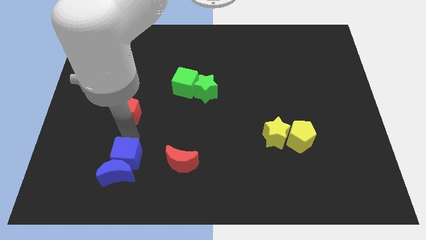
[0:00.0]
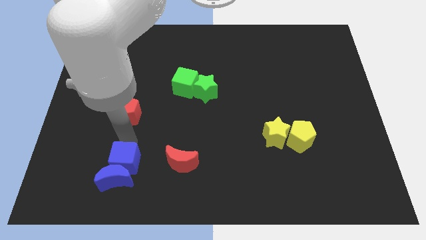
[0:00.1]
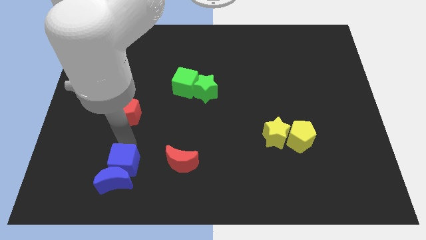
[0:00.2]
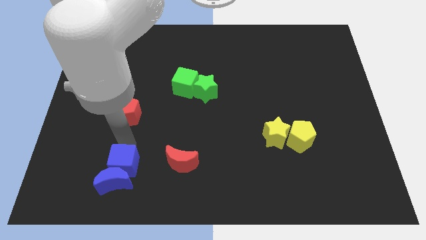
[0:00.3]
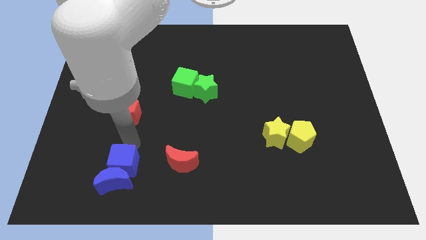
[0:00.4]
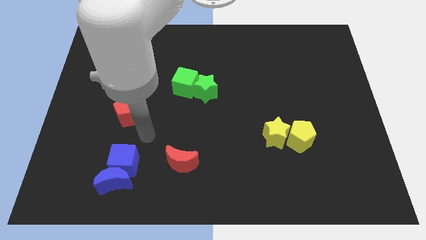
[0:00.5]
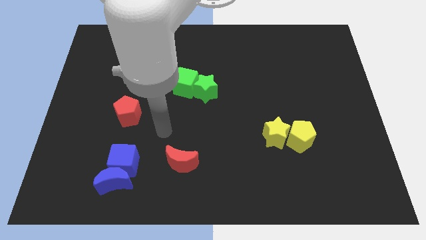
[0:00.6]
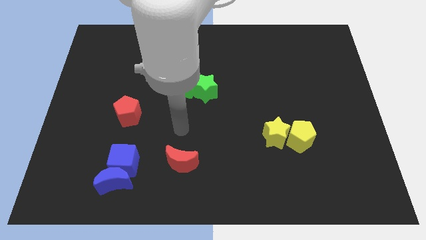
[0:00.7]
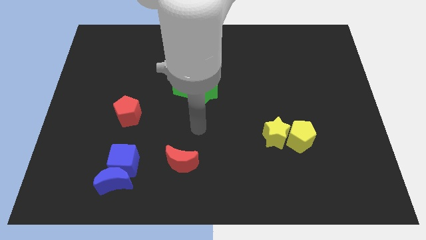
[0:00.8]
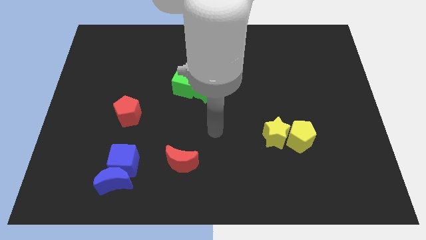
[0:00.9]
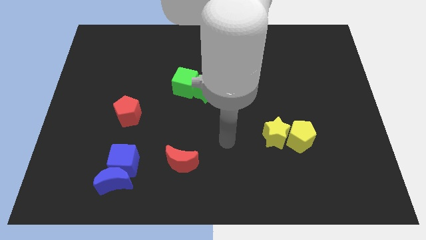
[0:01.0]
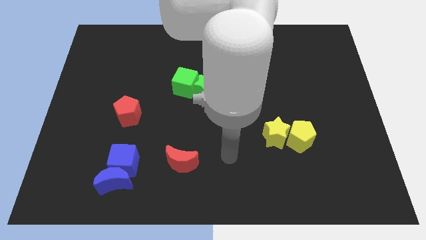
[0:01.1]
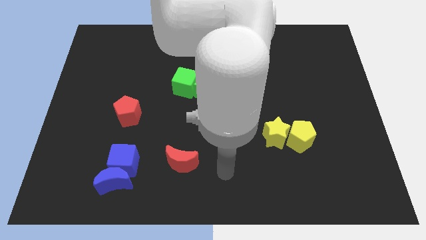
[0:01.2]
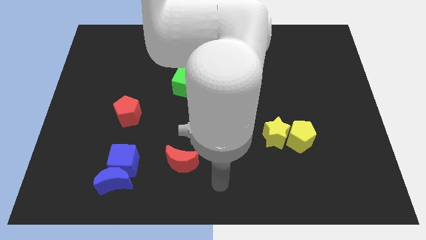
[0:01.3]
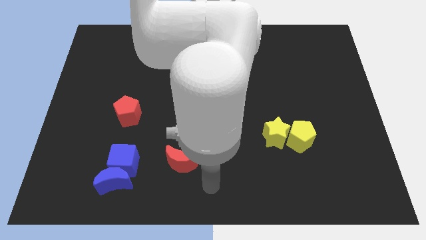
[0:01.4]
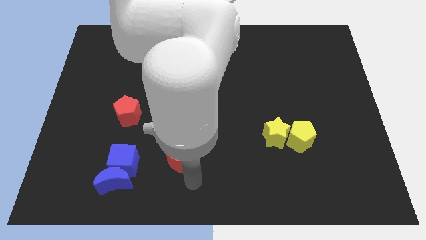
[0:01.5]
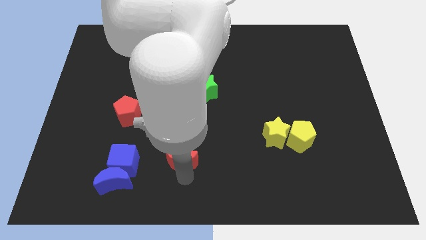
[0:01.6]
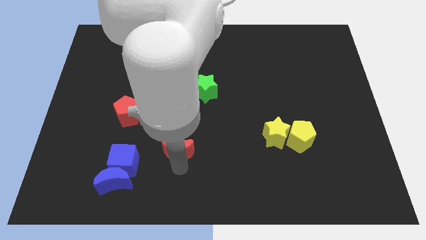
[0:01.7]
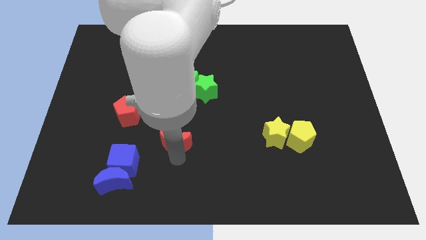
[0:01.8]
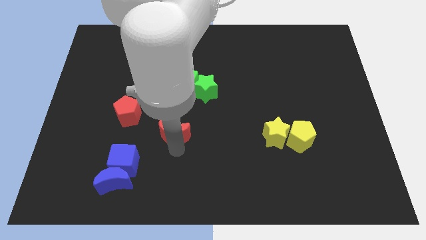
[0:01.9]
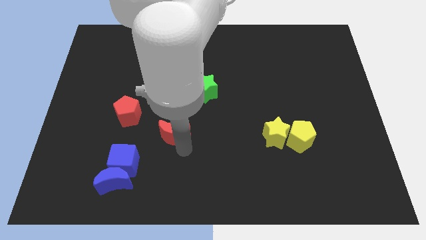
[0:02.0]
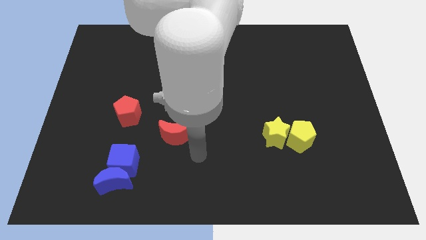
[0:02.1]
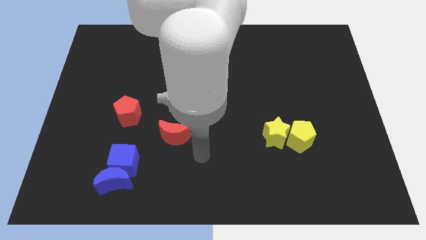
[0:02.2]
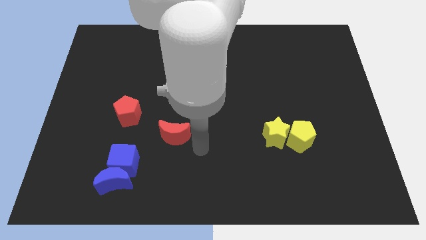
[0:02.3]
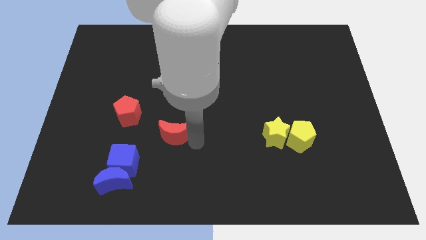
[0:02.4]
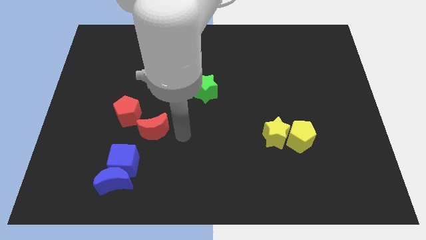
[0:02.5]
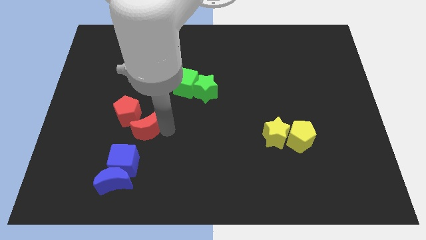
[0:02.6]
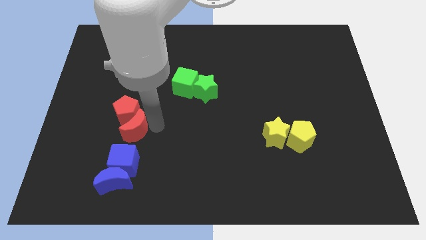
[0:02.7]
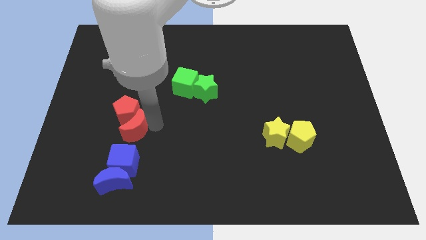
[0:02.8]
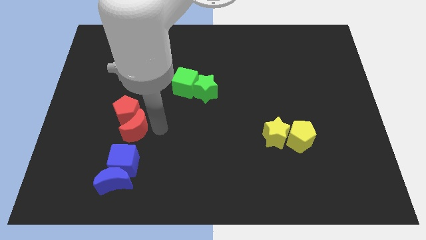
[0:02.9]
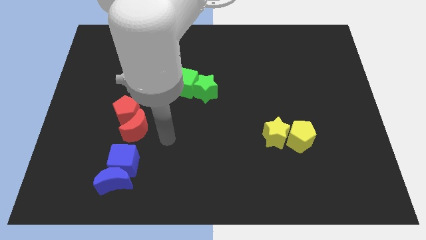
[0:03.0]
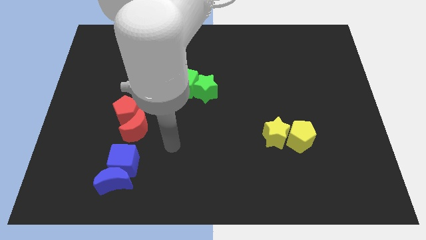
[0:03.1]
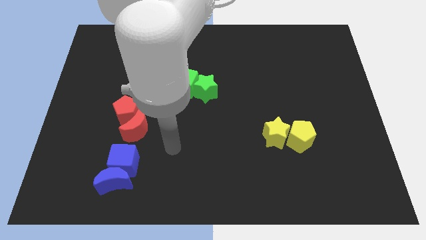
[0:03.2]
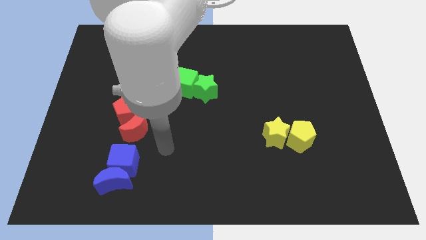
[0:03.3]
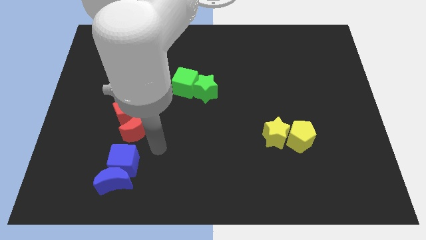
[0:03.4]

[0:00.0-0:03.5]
place the red moon at the bottom right side of the red pentagon

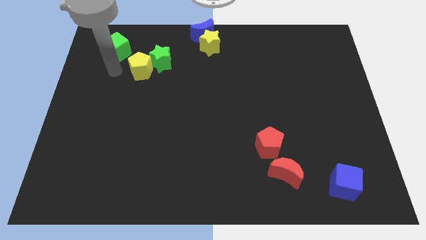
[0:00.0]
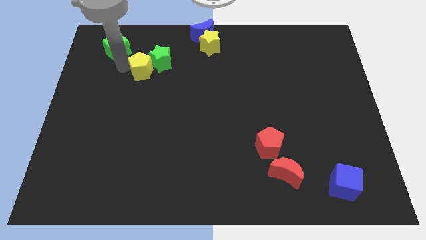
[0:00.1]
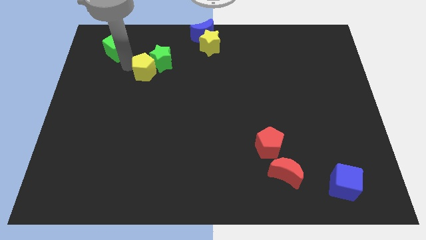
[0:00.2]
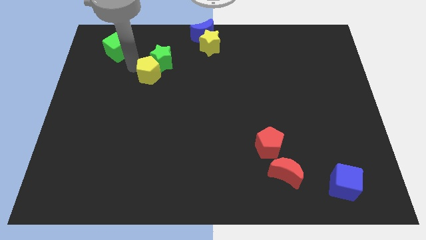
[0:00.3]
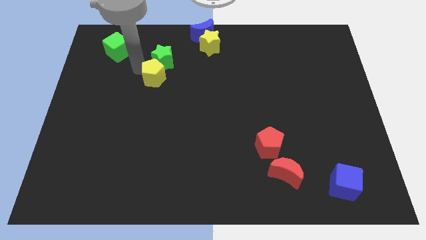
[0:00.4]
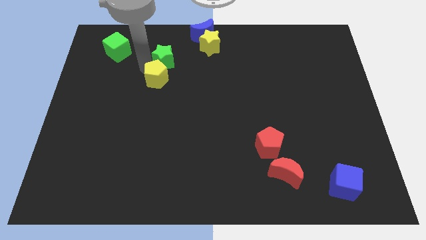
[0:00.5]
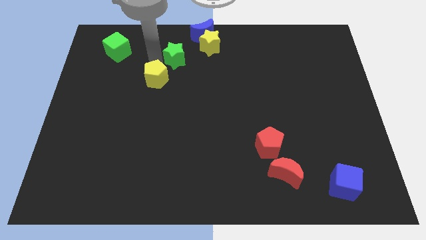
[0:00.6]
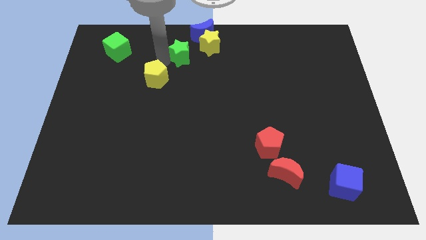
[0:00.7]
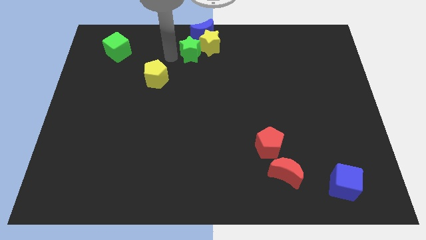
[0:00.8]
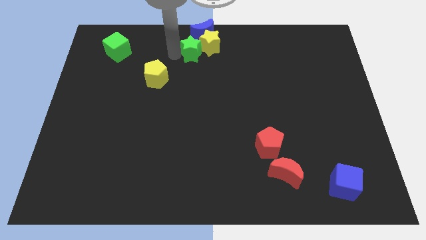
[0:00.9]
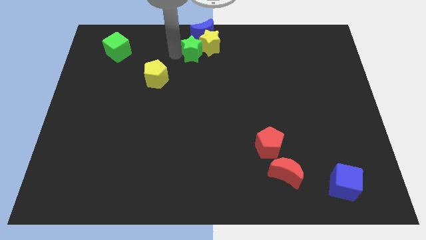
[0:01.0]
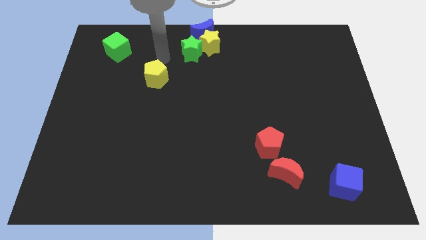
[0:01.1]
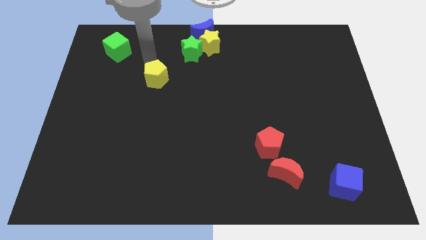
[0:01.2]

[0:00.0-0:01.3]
move the green star to the left side of yellow star

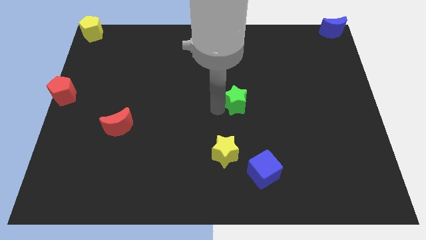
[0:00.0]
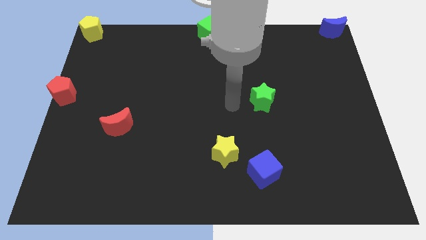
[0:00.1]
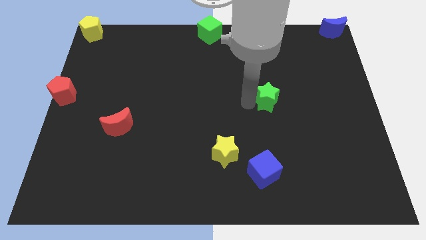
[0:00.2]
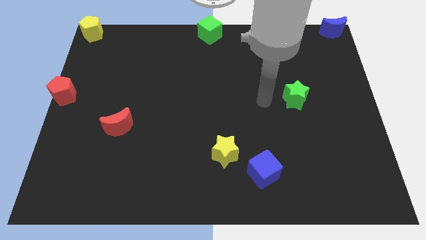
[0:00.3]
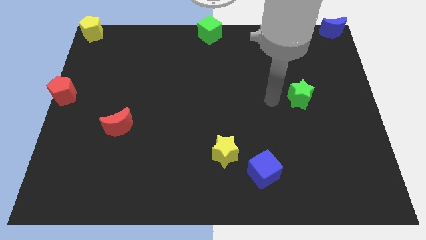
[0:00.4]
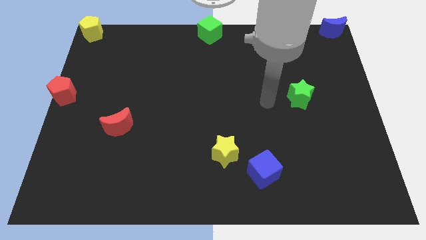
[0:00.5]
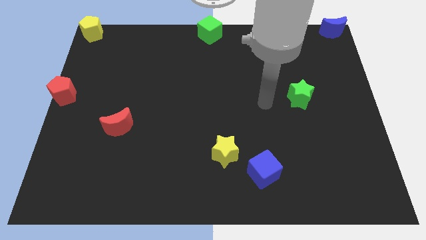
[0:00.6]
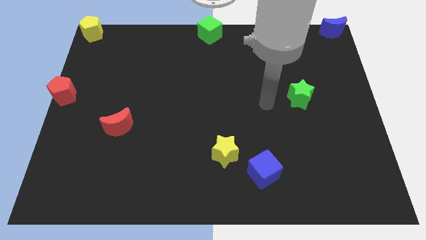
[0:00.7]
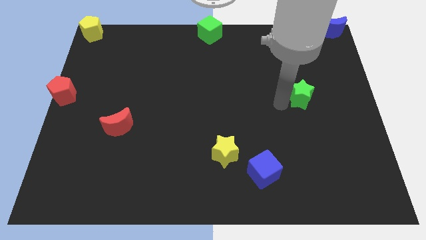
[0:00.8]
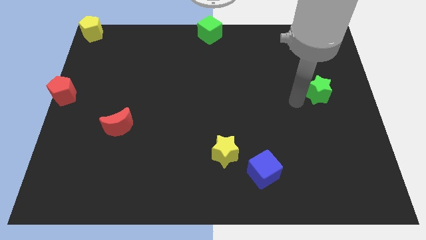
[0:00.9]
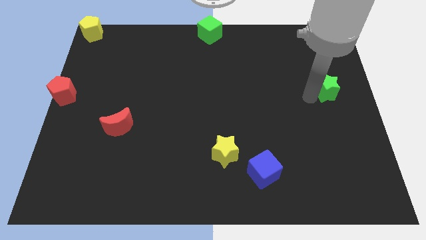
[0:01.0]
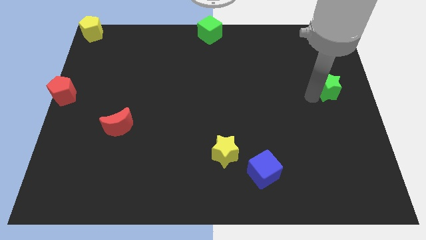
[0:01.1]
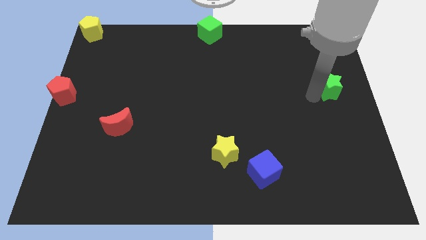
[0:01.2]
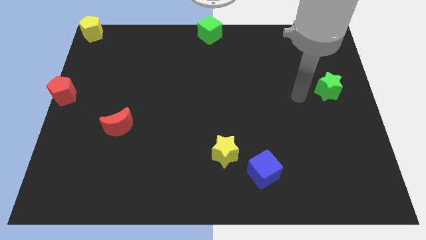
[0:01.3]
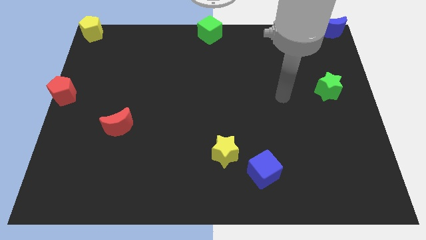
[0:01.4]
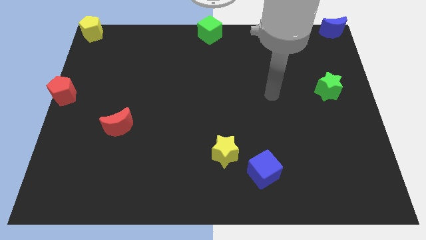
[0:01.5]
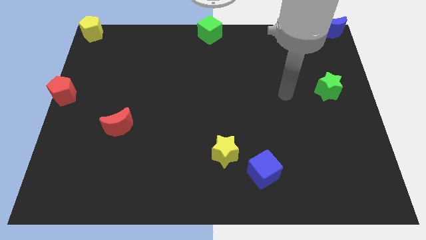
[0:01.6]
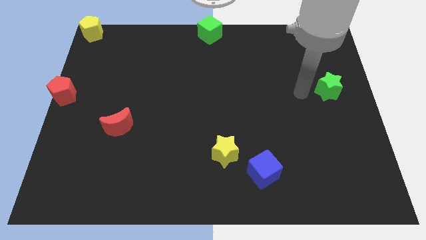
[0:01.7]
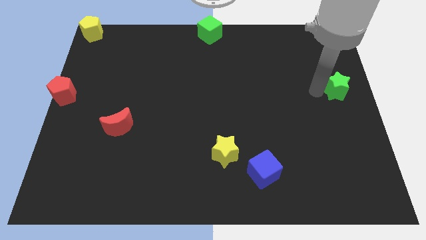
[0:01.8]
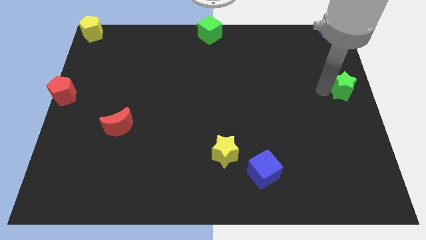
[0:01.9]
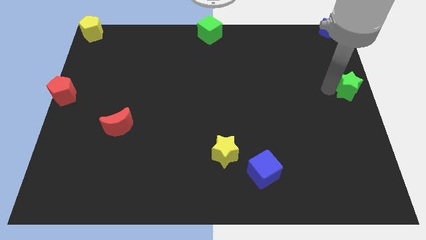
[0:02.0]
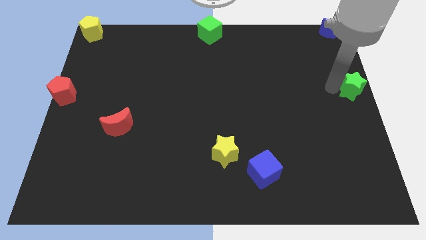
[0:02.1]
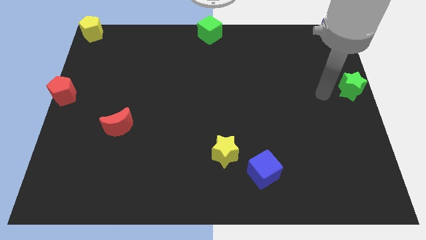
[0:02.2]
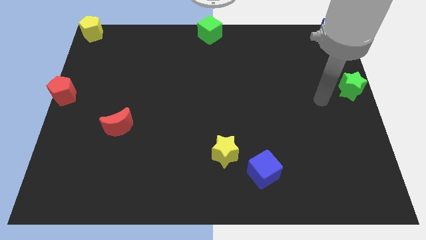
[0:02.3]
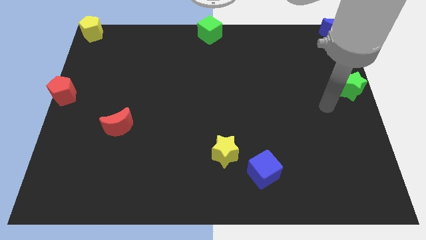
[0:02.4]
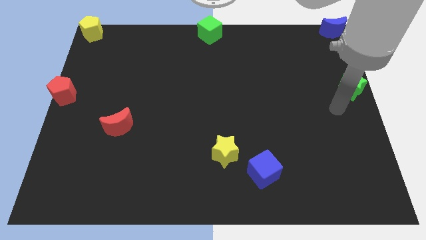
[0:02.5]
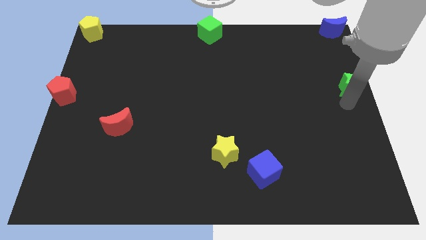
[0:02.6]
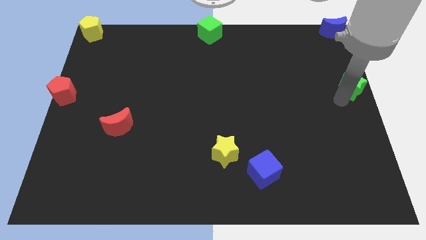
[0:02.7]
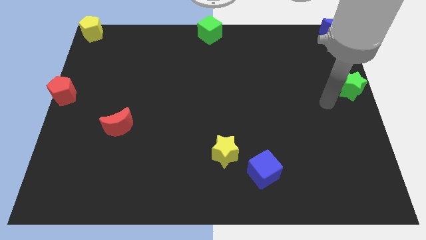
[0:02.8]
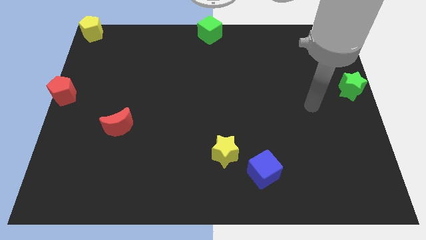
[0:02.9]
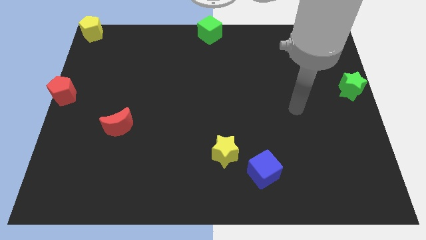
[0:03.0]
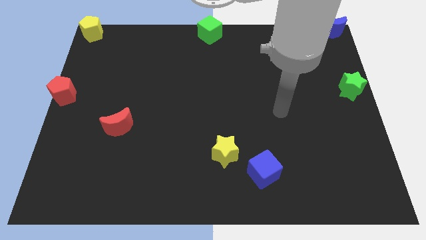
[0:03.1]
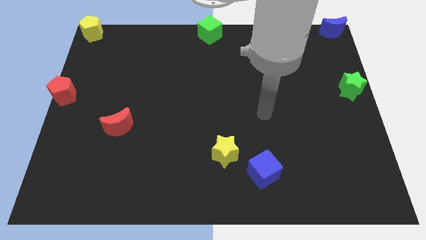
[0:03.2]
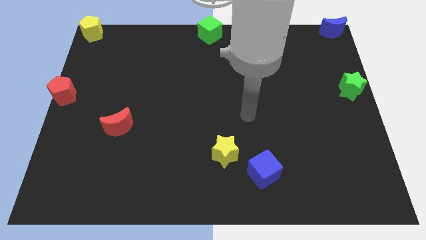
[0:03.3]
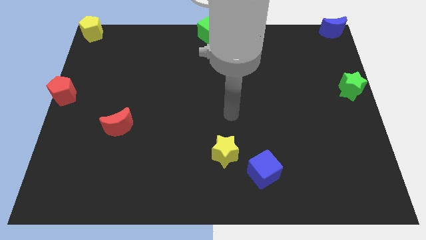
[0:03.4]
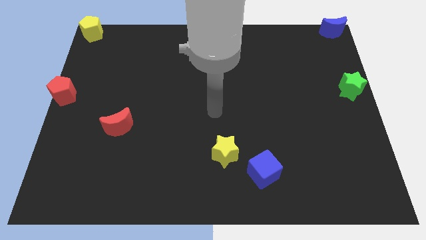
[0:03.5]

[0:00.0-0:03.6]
move the green star to the center right corner

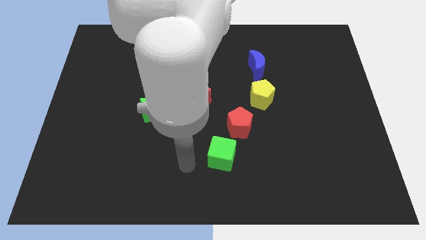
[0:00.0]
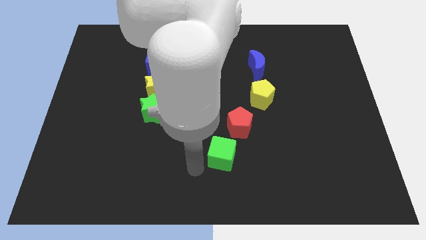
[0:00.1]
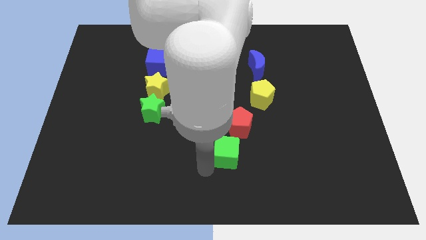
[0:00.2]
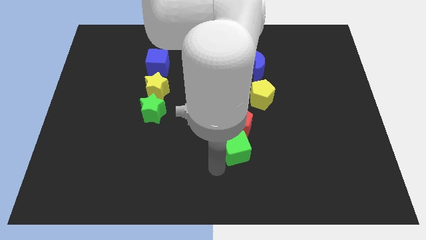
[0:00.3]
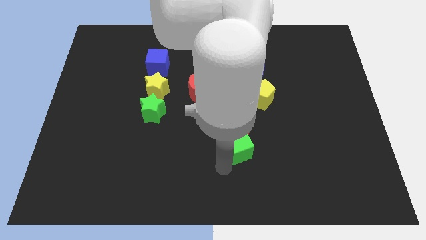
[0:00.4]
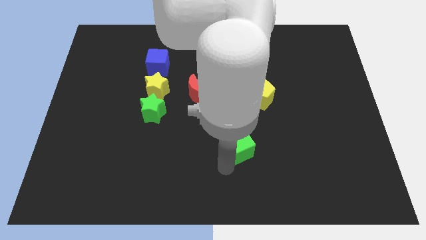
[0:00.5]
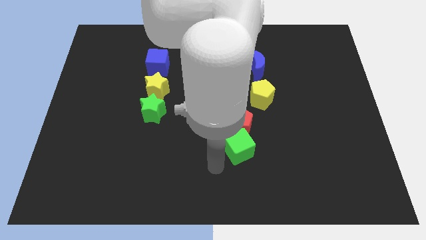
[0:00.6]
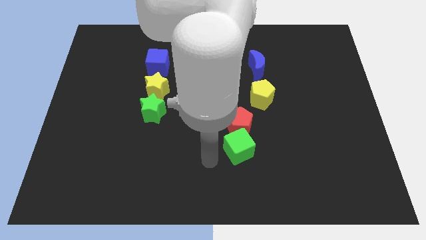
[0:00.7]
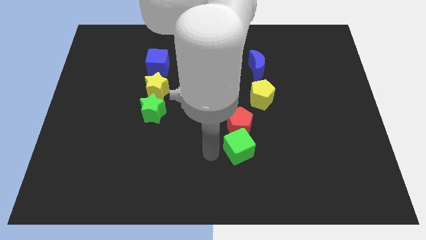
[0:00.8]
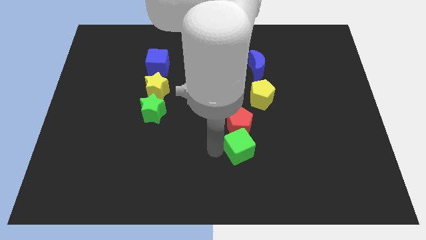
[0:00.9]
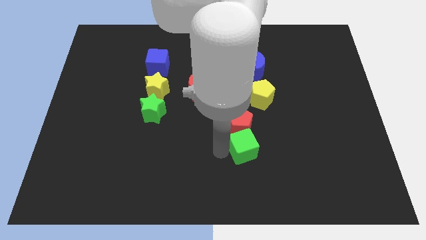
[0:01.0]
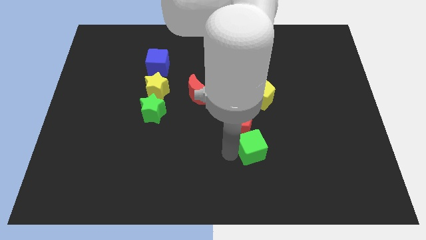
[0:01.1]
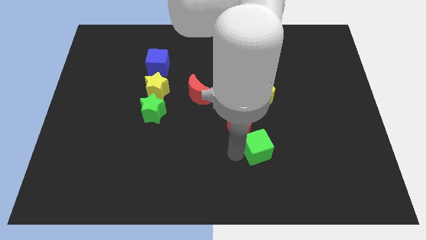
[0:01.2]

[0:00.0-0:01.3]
place the green cube to the bottom right of the red pentagon
